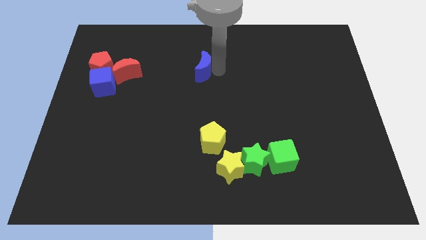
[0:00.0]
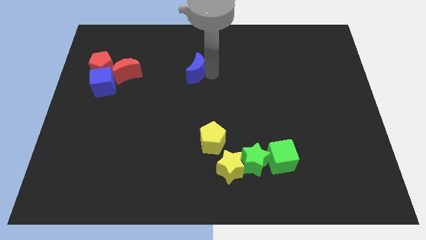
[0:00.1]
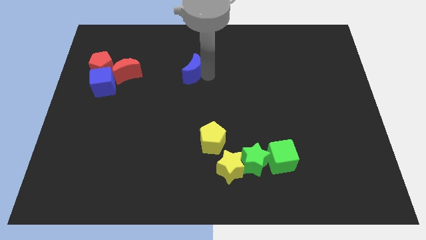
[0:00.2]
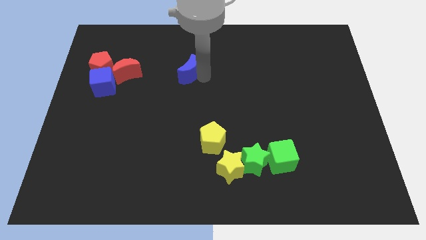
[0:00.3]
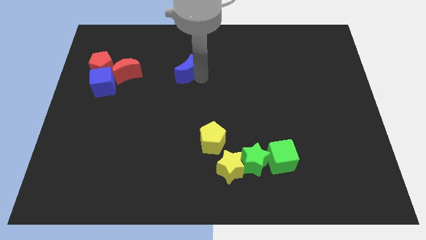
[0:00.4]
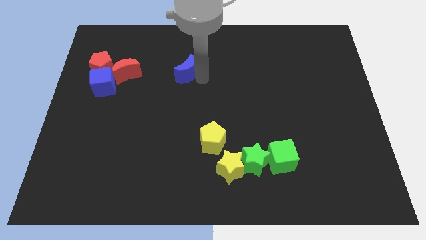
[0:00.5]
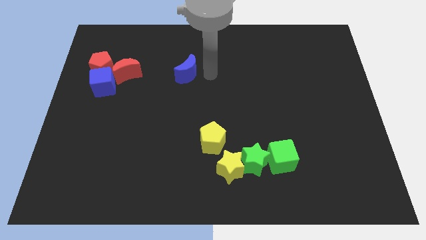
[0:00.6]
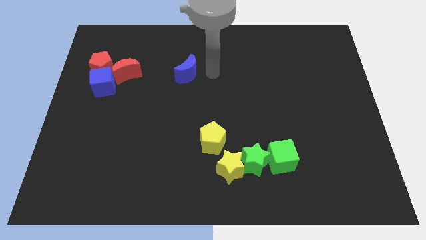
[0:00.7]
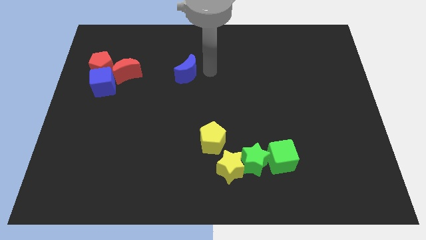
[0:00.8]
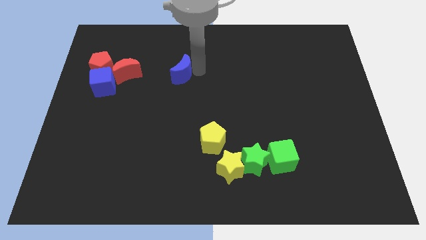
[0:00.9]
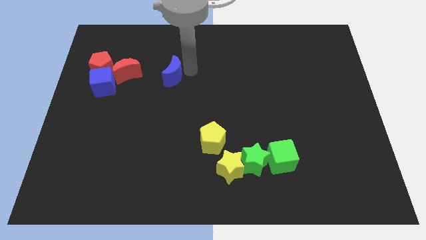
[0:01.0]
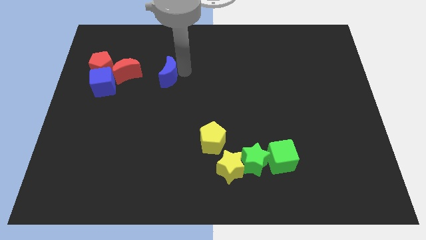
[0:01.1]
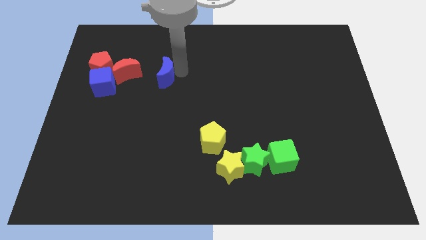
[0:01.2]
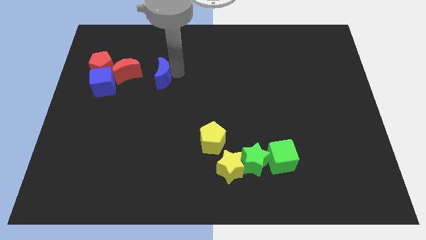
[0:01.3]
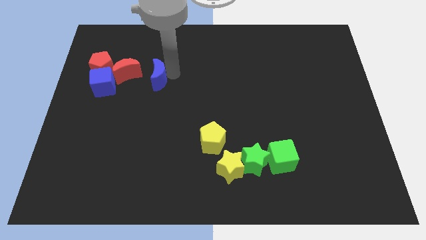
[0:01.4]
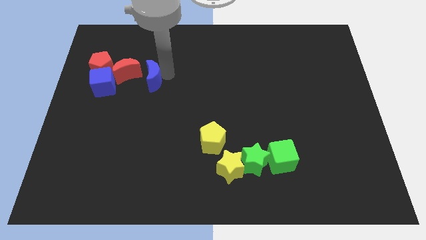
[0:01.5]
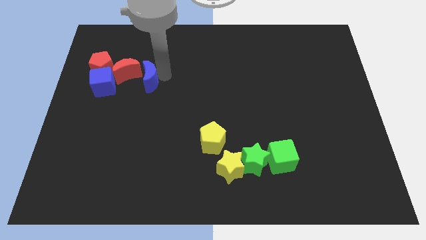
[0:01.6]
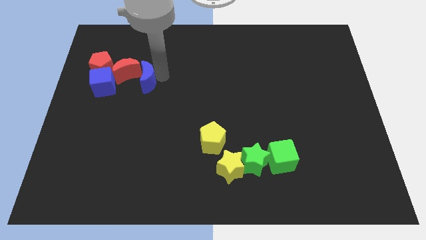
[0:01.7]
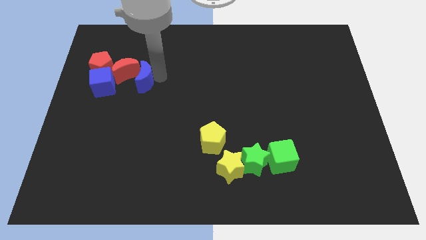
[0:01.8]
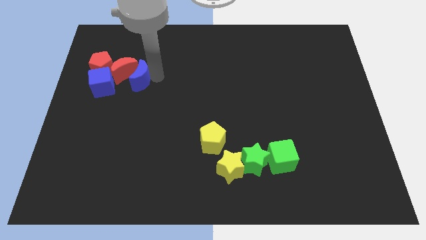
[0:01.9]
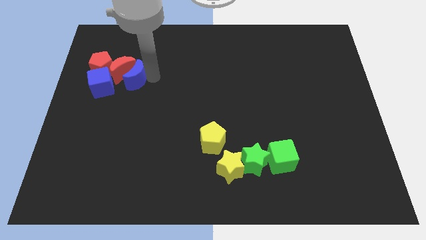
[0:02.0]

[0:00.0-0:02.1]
push blue crescent beside red crescent

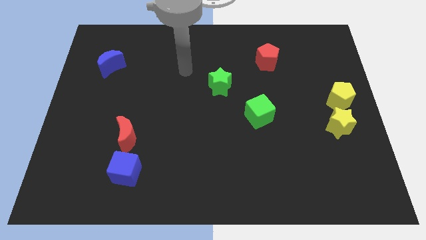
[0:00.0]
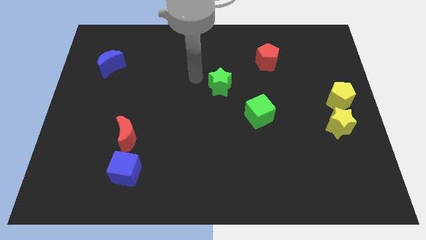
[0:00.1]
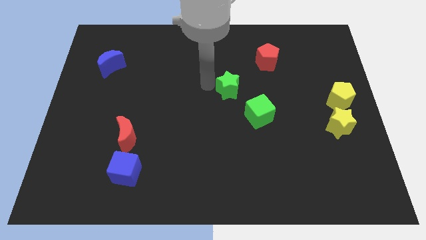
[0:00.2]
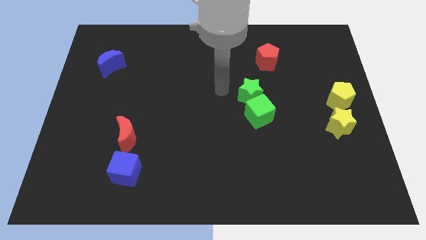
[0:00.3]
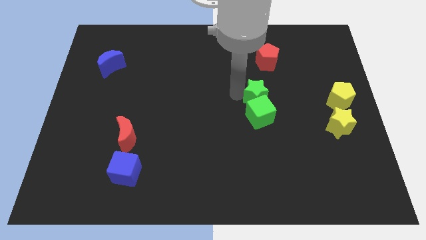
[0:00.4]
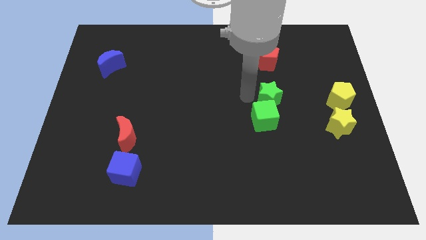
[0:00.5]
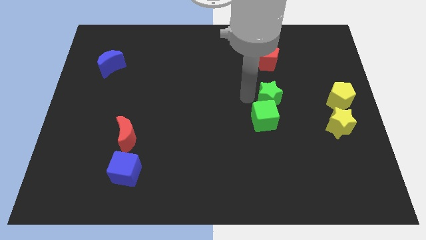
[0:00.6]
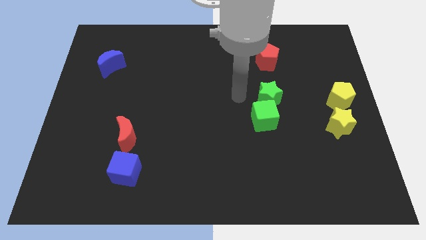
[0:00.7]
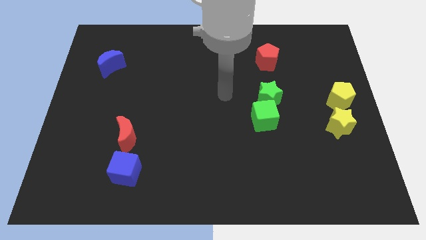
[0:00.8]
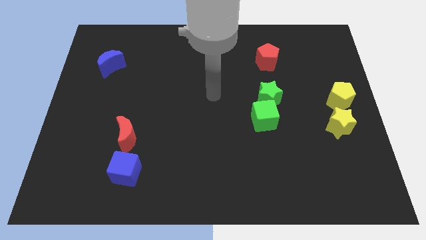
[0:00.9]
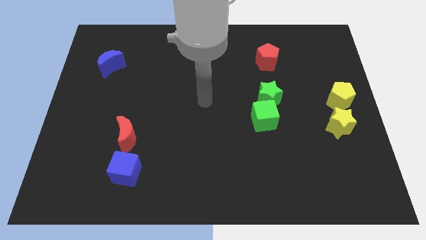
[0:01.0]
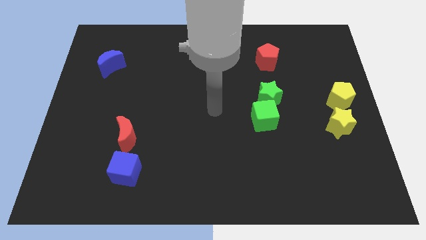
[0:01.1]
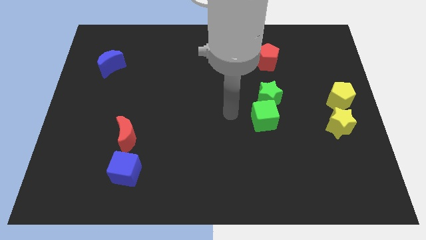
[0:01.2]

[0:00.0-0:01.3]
push the green star into the green cube

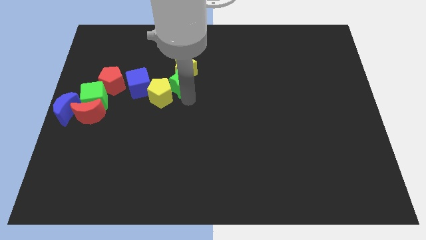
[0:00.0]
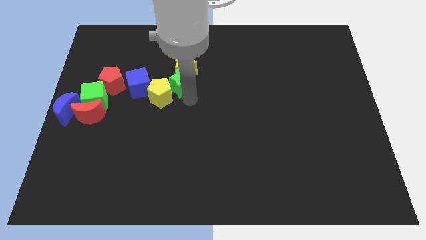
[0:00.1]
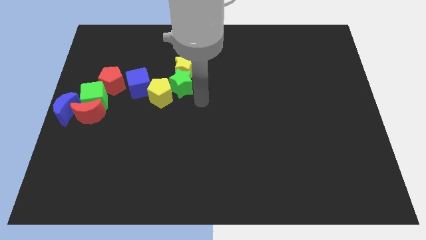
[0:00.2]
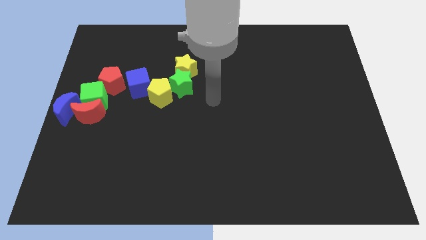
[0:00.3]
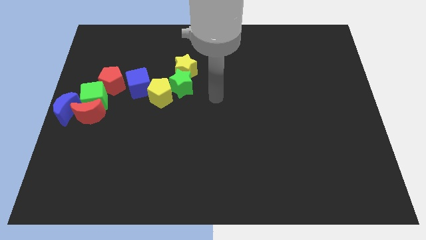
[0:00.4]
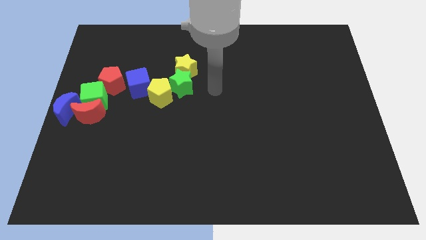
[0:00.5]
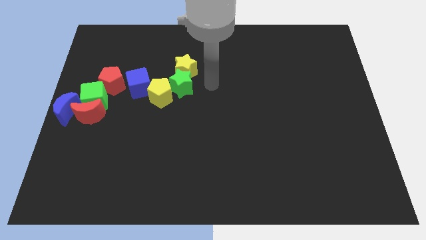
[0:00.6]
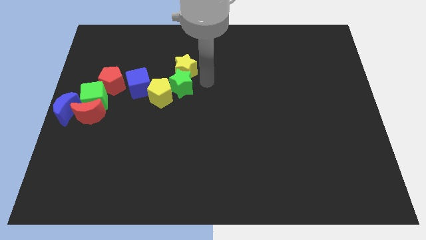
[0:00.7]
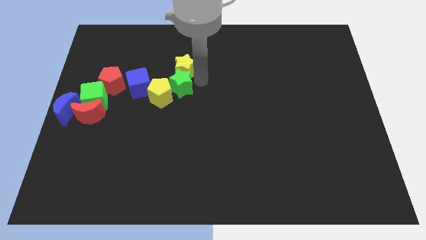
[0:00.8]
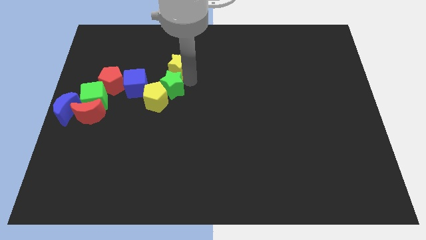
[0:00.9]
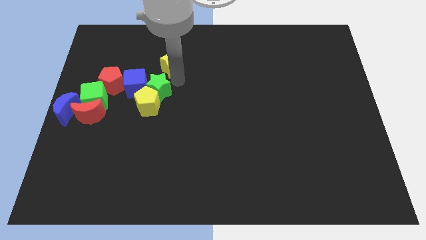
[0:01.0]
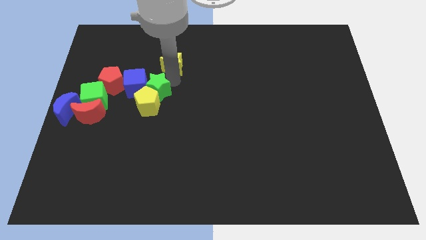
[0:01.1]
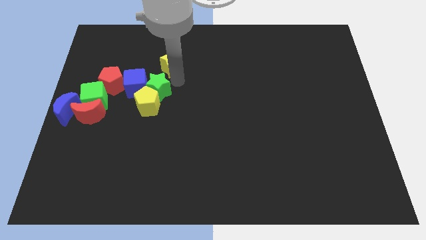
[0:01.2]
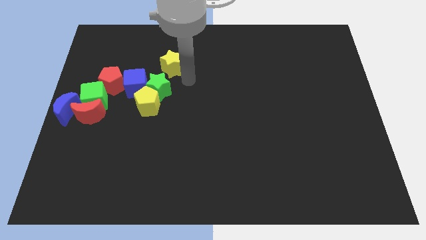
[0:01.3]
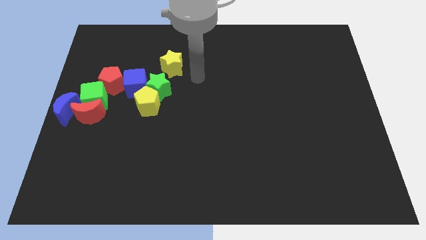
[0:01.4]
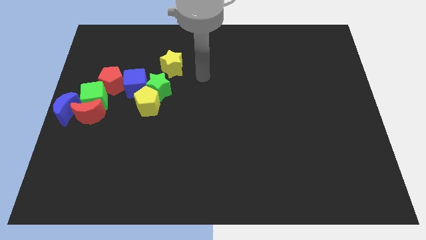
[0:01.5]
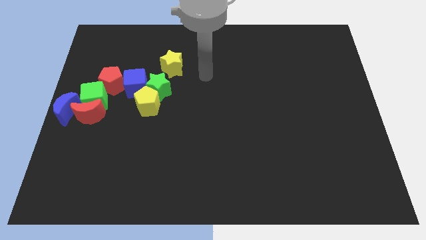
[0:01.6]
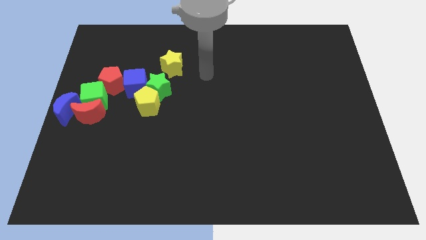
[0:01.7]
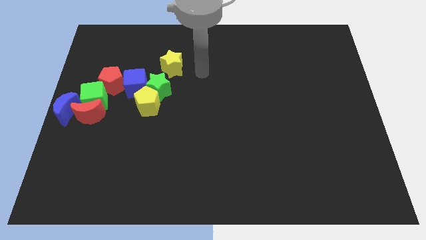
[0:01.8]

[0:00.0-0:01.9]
place green star in between the yellow star and yellow pentagon

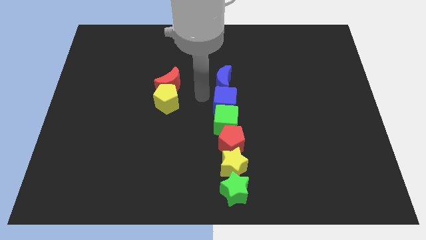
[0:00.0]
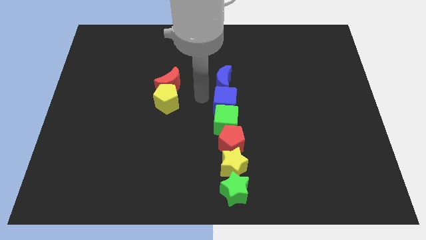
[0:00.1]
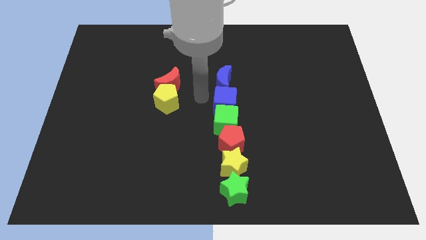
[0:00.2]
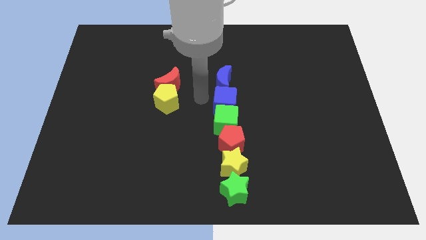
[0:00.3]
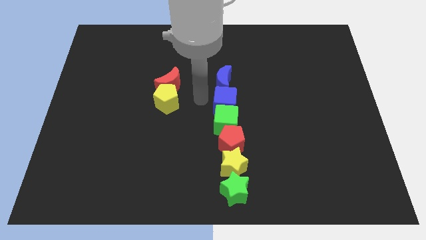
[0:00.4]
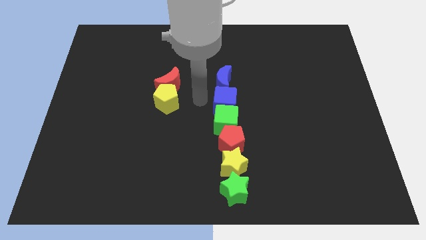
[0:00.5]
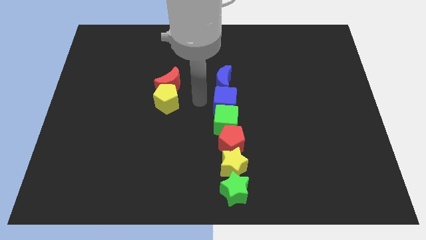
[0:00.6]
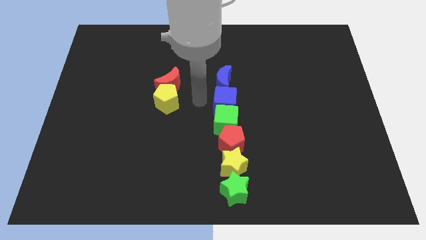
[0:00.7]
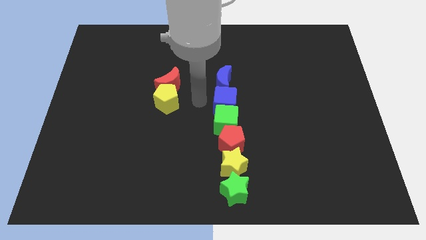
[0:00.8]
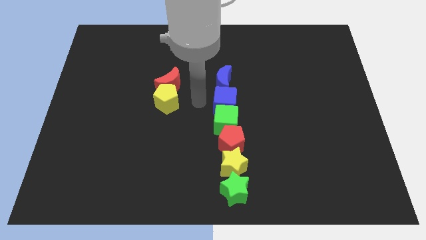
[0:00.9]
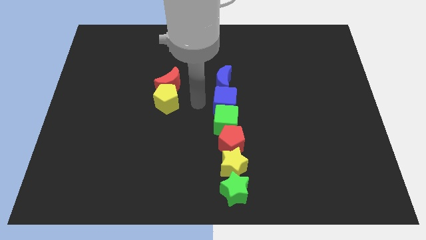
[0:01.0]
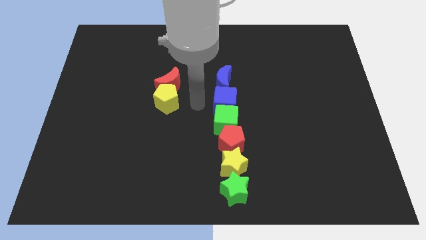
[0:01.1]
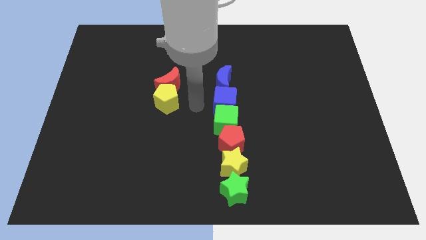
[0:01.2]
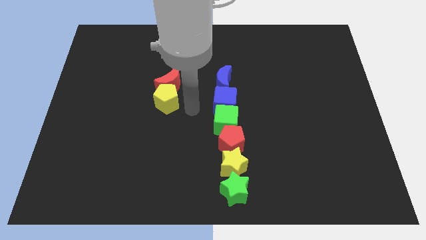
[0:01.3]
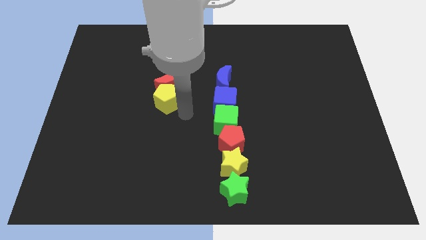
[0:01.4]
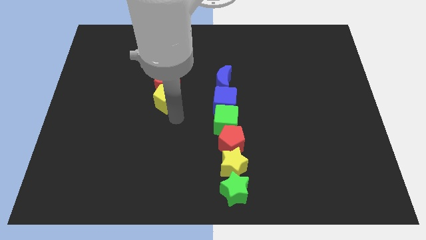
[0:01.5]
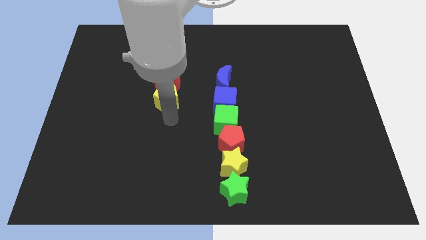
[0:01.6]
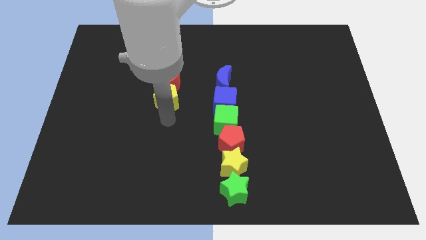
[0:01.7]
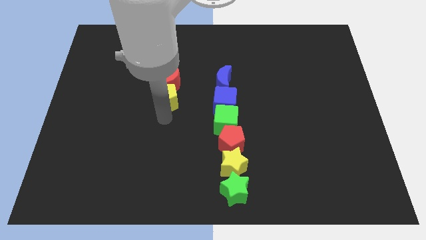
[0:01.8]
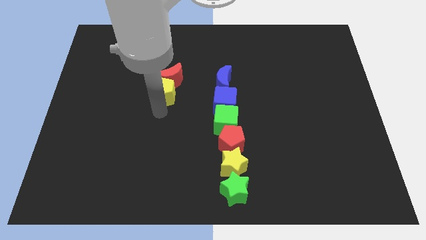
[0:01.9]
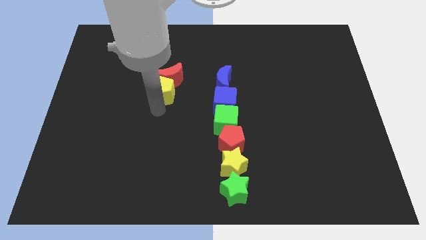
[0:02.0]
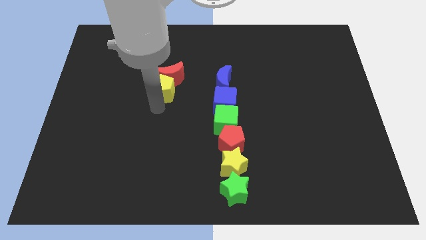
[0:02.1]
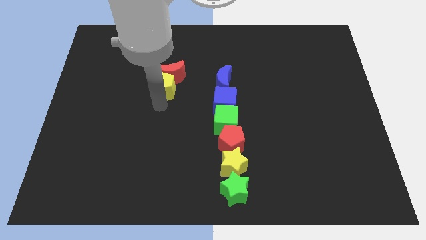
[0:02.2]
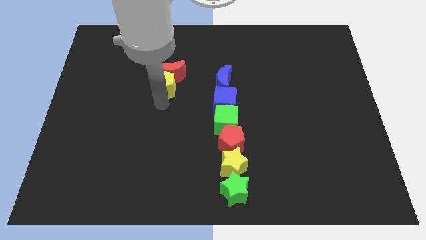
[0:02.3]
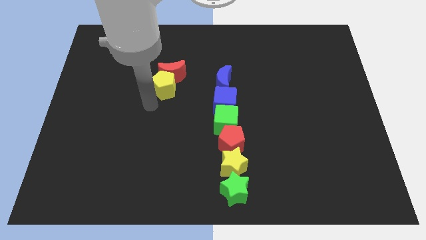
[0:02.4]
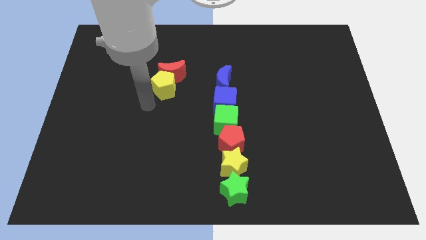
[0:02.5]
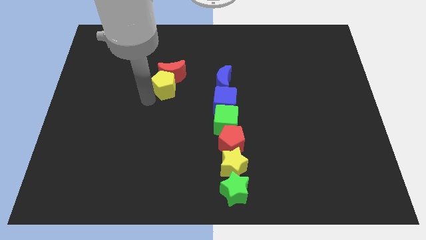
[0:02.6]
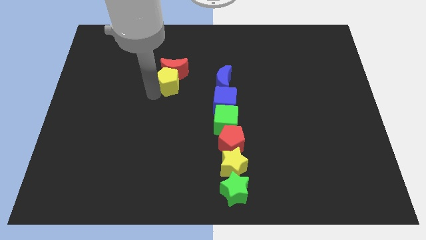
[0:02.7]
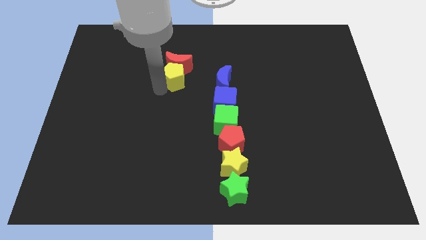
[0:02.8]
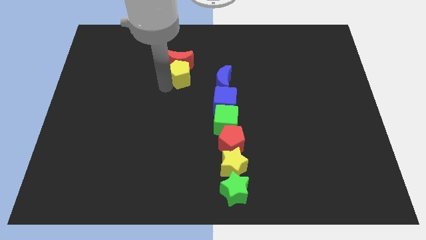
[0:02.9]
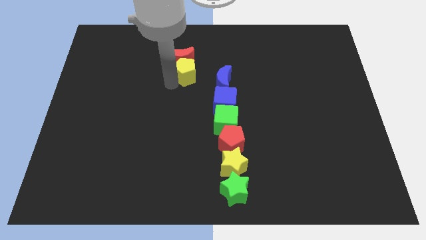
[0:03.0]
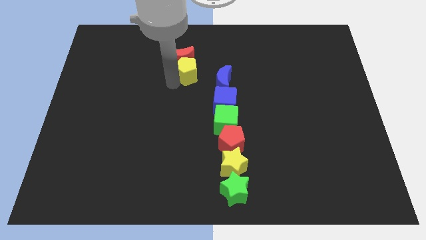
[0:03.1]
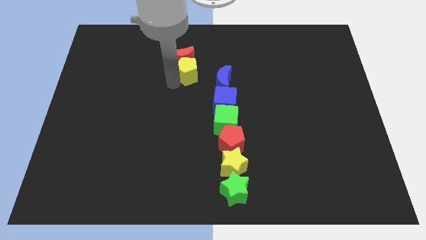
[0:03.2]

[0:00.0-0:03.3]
push the yellow pentagon of the left of the blue moon

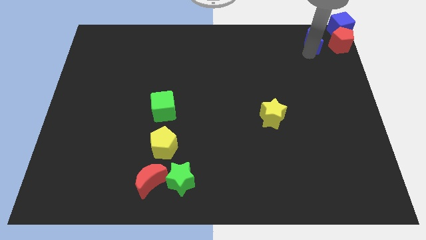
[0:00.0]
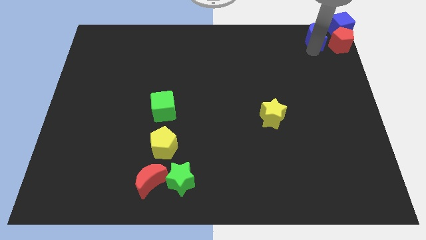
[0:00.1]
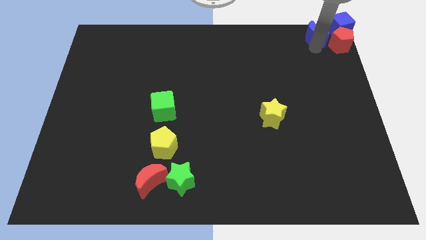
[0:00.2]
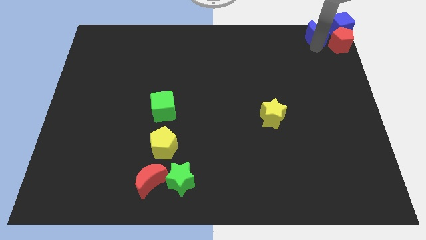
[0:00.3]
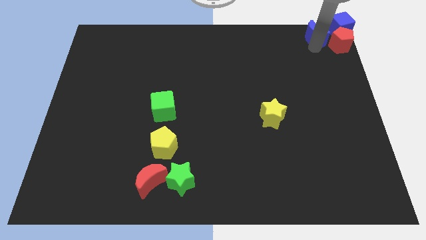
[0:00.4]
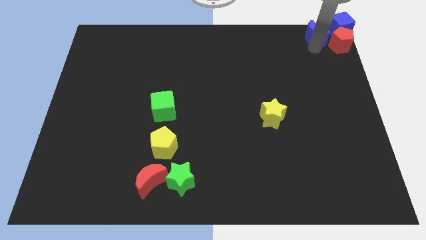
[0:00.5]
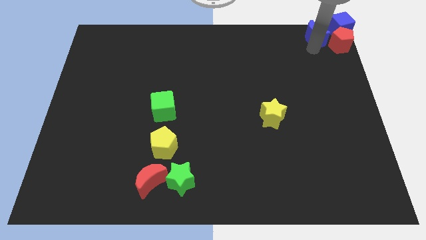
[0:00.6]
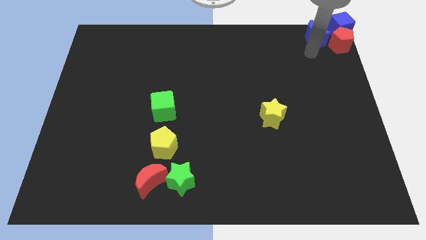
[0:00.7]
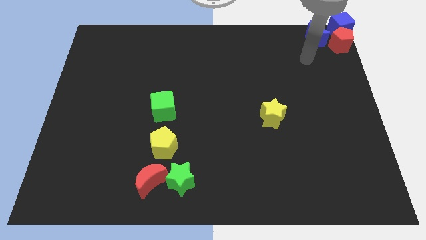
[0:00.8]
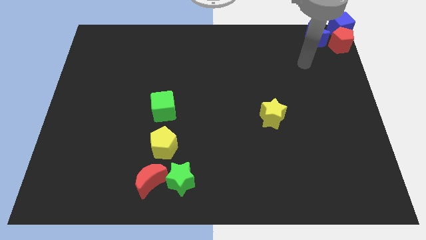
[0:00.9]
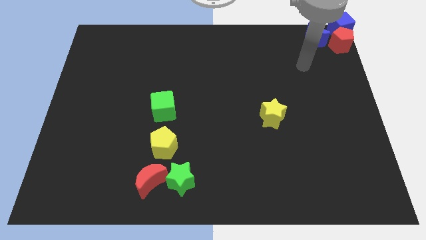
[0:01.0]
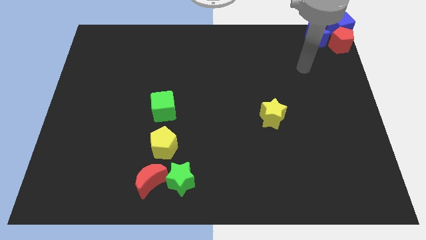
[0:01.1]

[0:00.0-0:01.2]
place the blue crescent left to the blue cube
